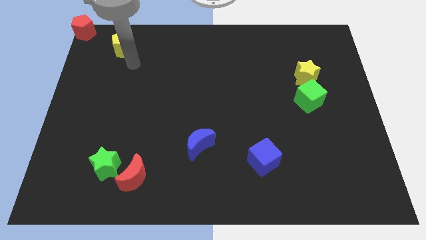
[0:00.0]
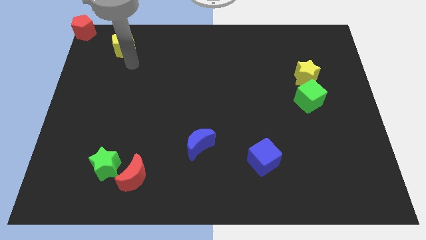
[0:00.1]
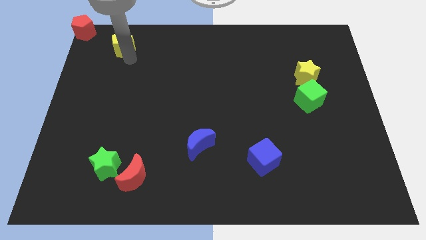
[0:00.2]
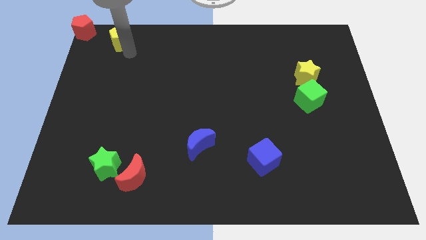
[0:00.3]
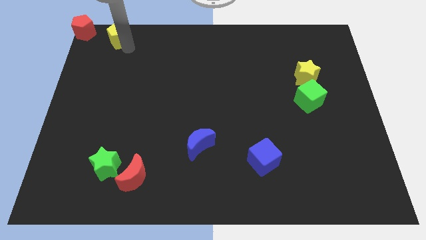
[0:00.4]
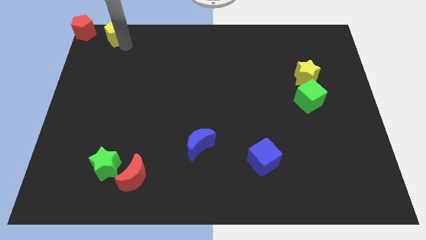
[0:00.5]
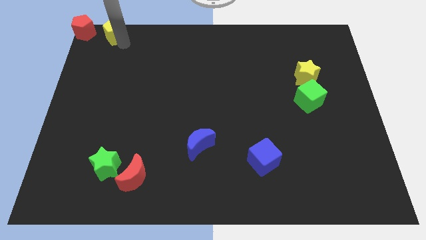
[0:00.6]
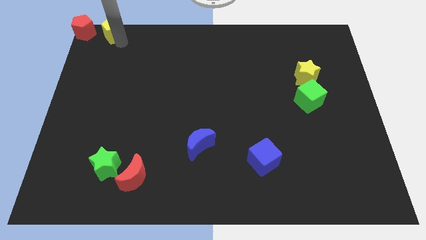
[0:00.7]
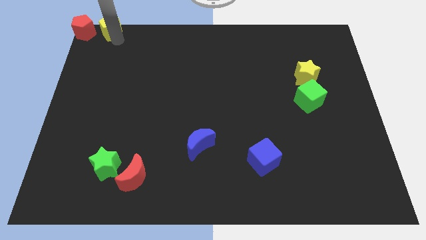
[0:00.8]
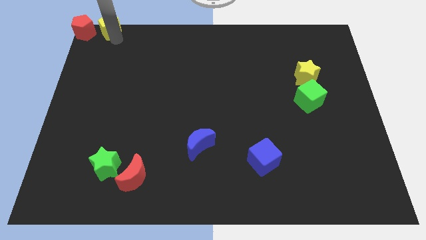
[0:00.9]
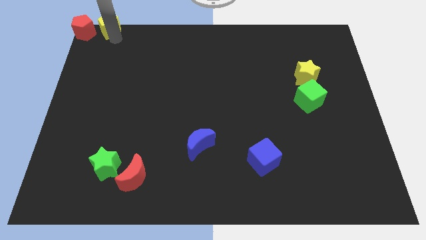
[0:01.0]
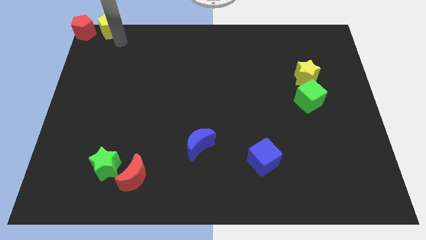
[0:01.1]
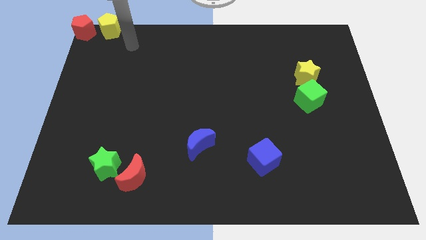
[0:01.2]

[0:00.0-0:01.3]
move the yellow pentagon to the right of the red pentagon

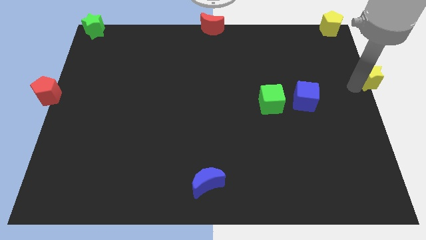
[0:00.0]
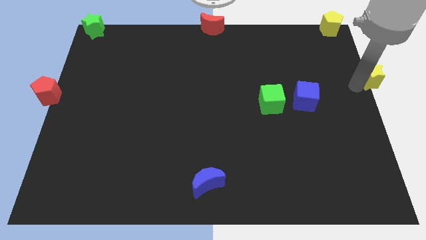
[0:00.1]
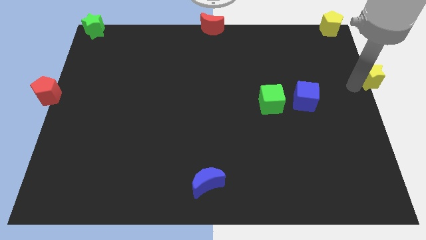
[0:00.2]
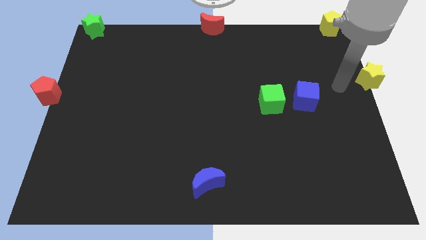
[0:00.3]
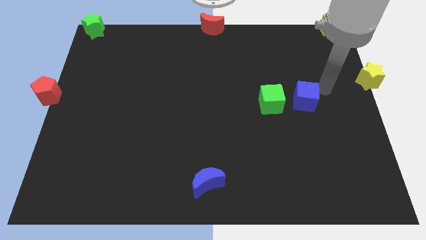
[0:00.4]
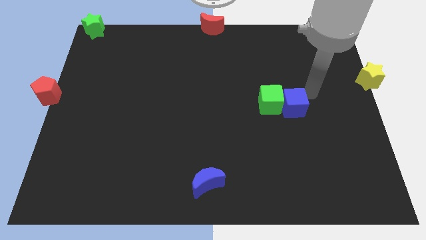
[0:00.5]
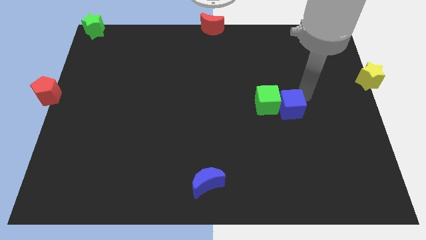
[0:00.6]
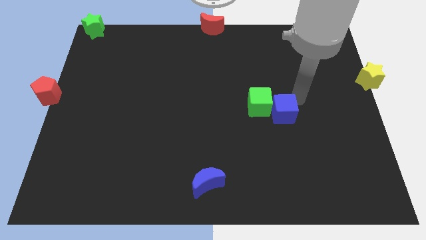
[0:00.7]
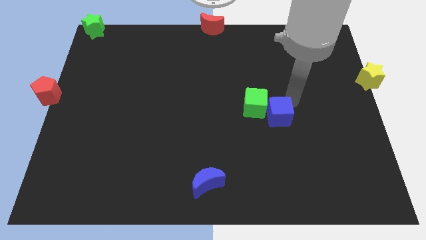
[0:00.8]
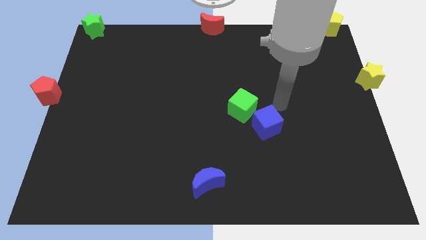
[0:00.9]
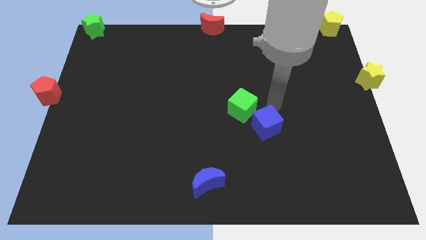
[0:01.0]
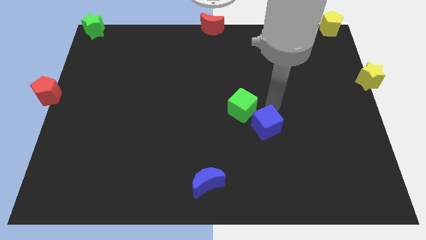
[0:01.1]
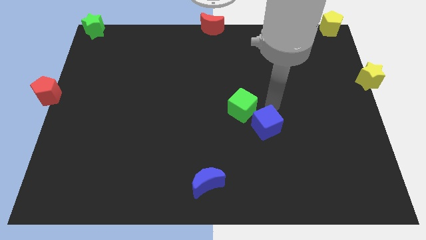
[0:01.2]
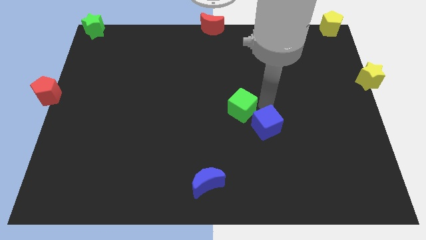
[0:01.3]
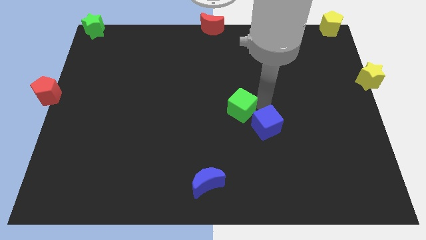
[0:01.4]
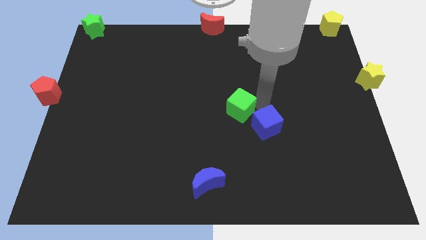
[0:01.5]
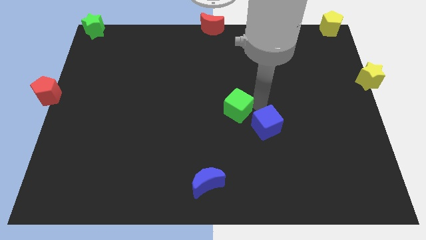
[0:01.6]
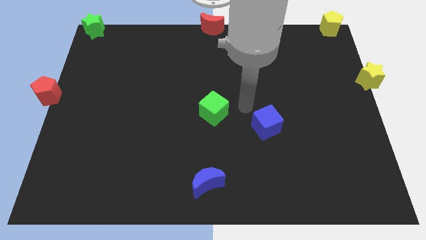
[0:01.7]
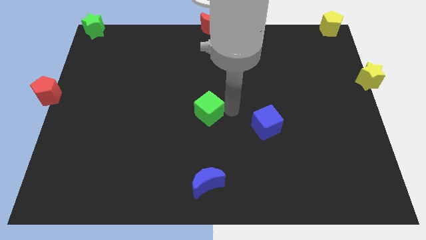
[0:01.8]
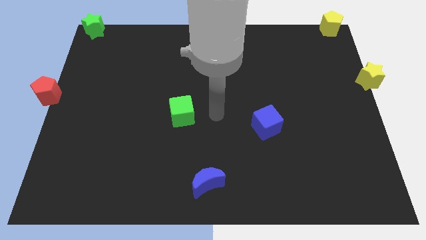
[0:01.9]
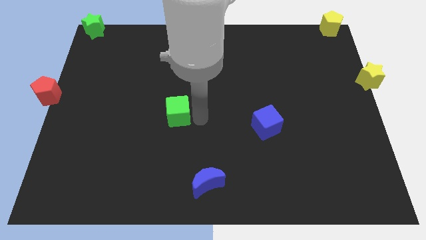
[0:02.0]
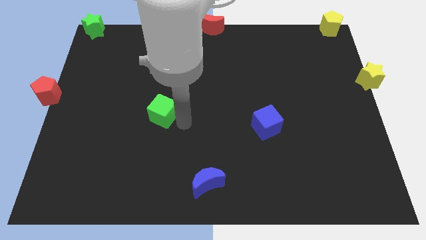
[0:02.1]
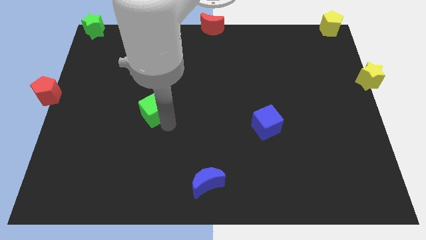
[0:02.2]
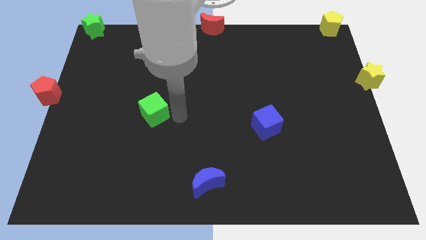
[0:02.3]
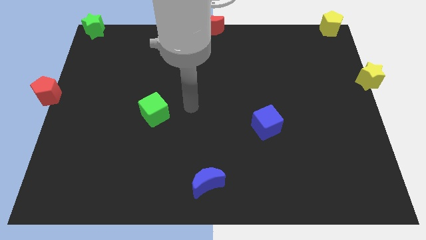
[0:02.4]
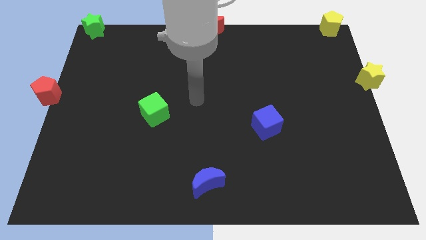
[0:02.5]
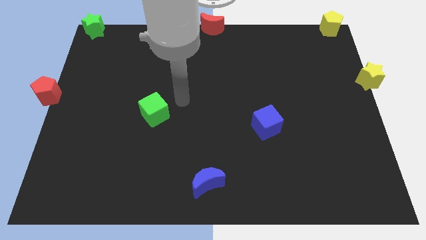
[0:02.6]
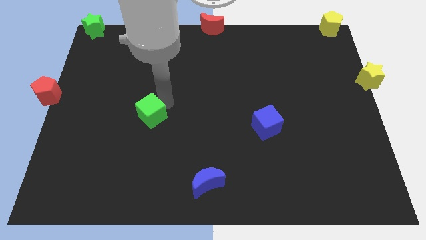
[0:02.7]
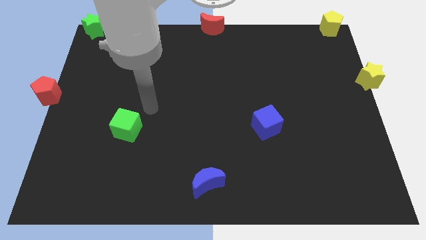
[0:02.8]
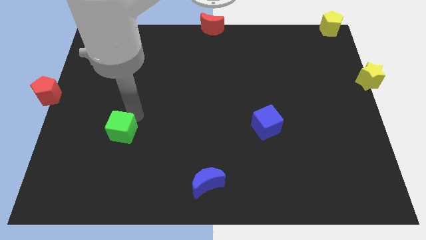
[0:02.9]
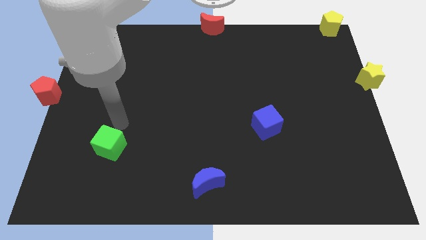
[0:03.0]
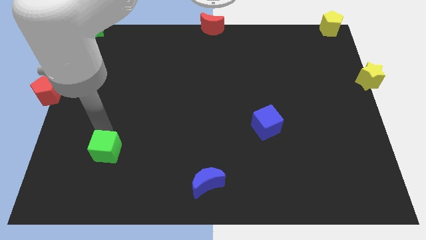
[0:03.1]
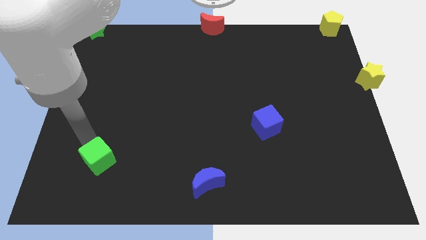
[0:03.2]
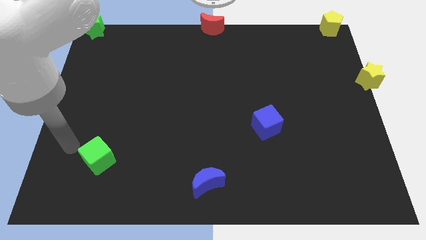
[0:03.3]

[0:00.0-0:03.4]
separate green cube from the blue cube

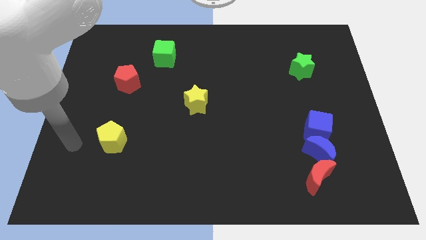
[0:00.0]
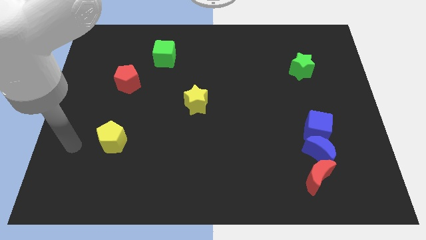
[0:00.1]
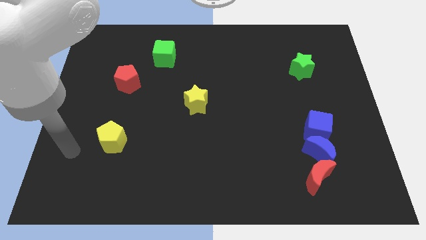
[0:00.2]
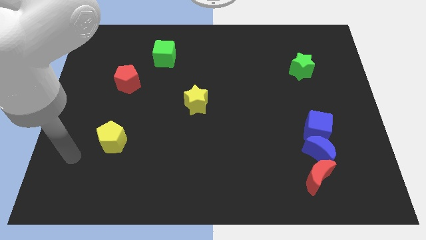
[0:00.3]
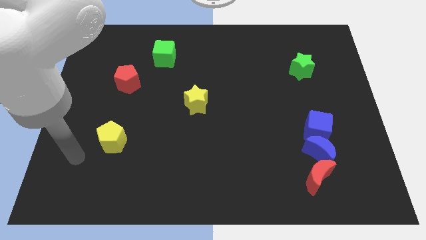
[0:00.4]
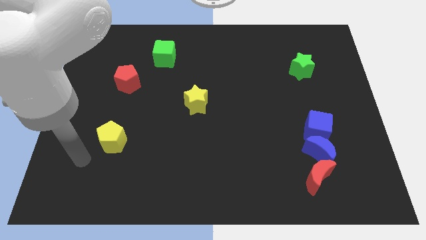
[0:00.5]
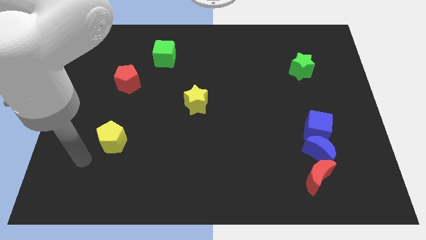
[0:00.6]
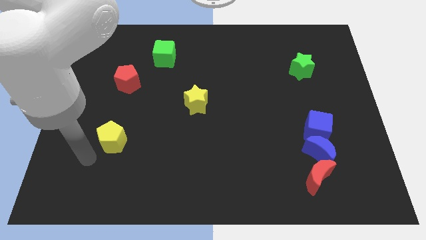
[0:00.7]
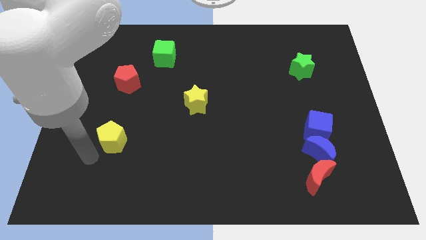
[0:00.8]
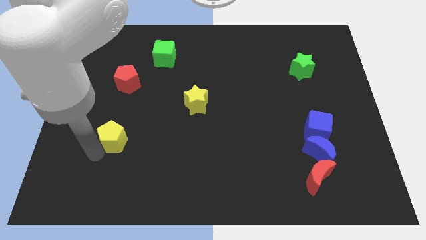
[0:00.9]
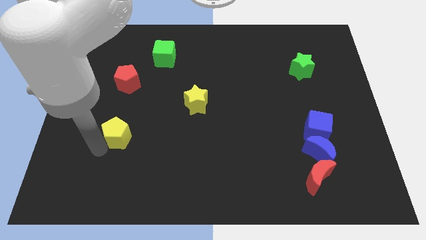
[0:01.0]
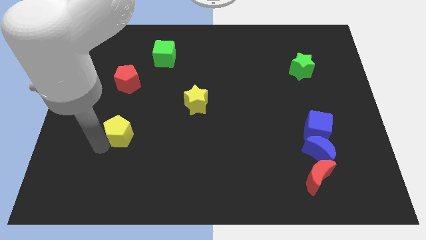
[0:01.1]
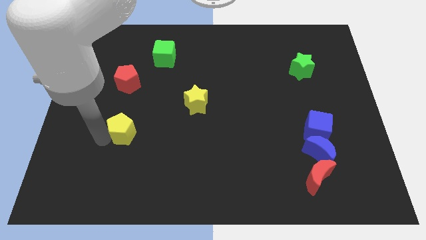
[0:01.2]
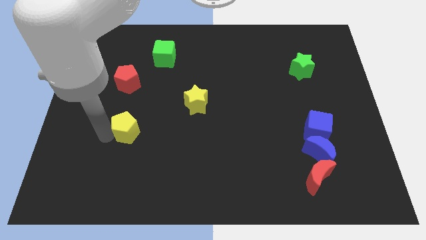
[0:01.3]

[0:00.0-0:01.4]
move your arm to the yellow pentagon

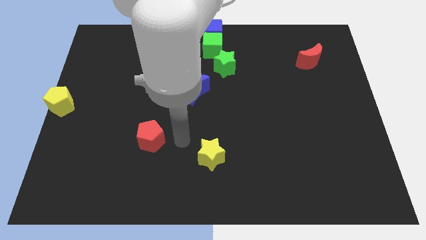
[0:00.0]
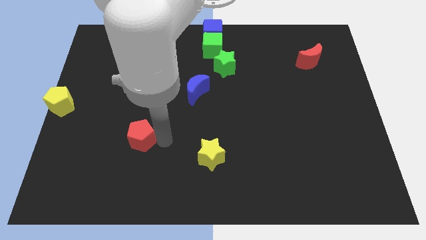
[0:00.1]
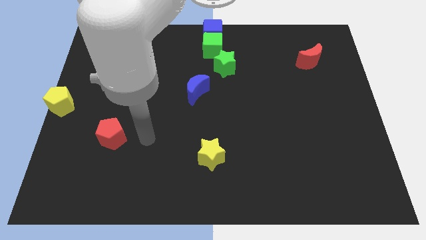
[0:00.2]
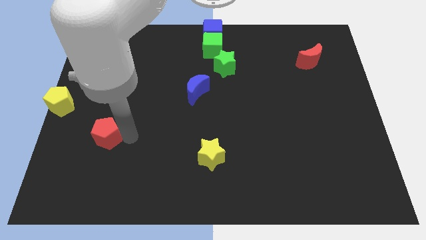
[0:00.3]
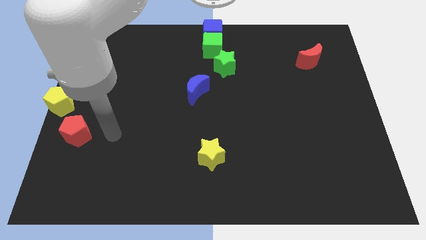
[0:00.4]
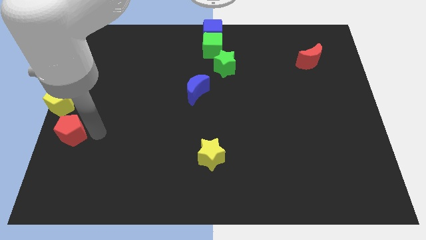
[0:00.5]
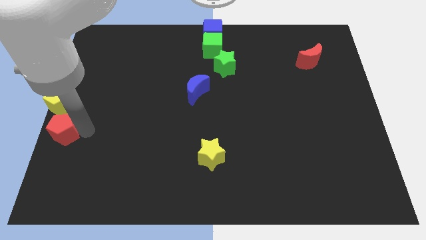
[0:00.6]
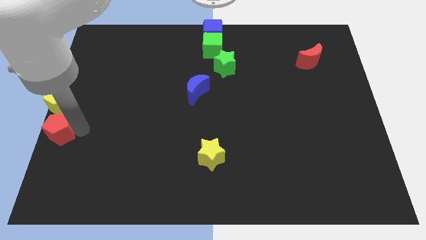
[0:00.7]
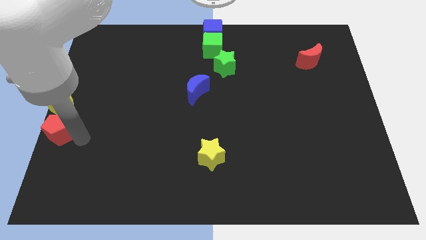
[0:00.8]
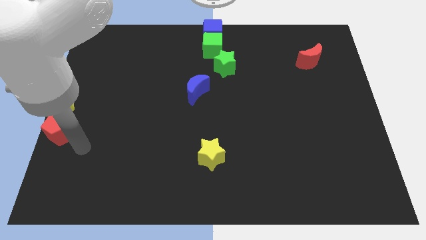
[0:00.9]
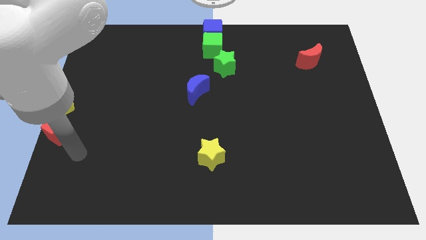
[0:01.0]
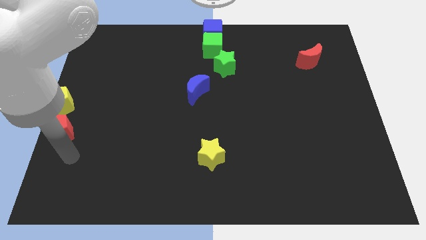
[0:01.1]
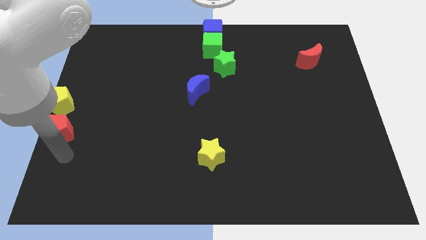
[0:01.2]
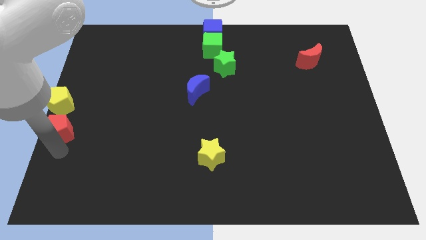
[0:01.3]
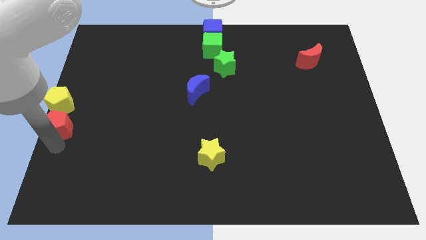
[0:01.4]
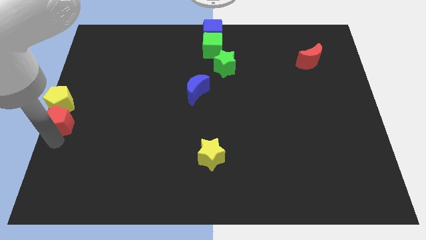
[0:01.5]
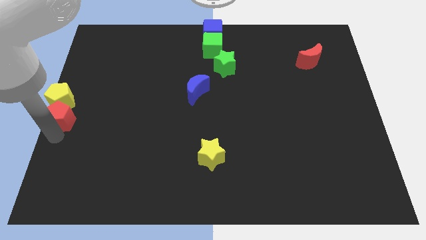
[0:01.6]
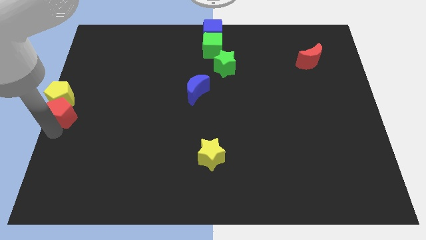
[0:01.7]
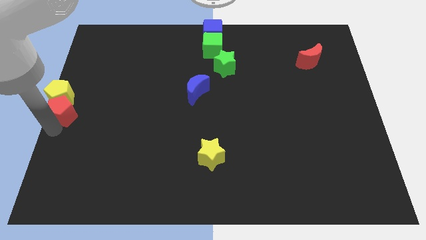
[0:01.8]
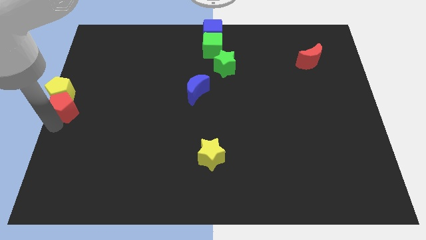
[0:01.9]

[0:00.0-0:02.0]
push the red pentagon into the yellow pentagon

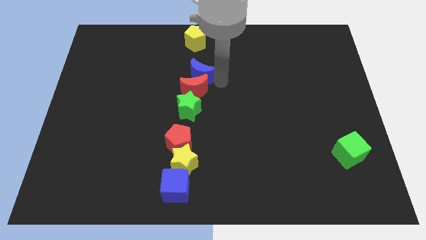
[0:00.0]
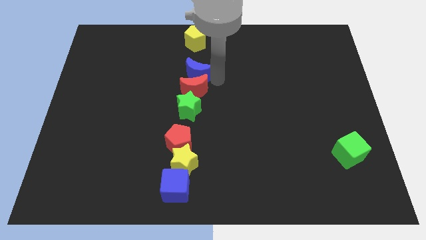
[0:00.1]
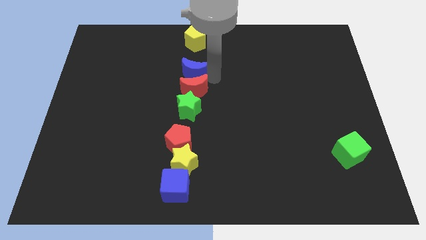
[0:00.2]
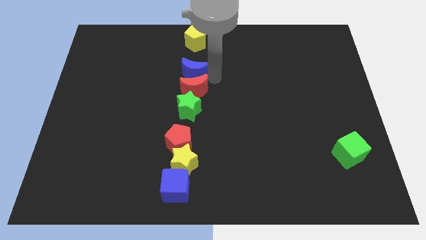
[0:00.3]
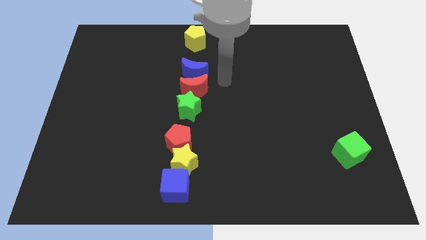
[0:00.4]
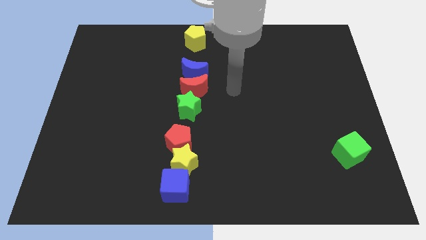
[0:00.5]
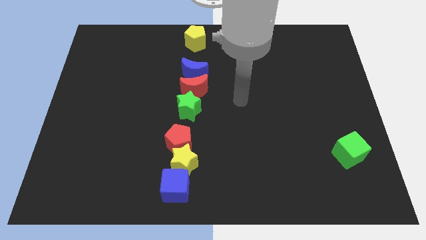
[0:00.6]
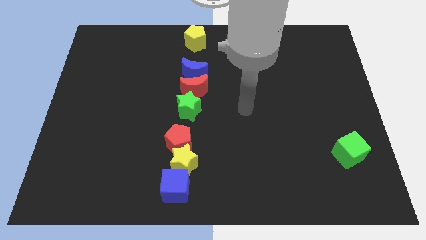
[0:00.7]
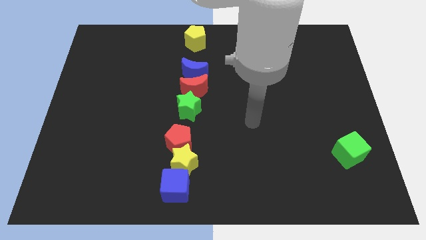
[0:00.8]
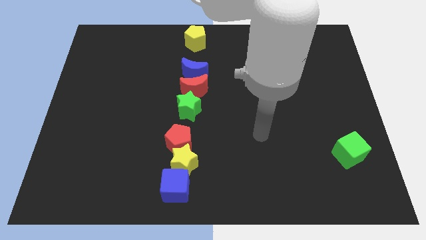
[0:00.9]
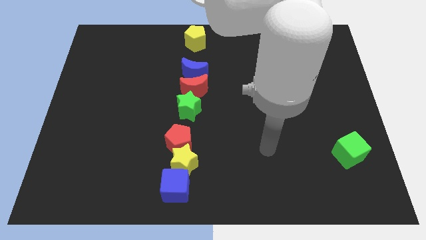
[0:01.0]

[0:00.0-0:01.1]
place the blue crescent in between the red crescent and yellow pentagon
